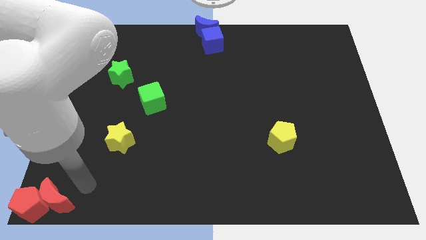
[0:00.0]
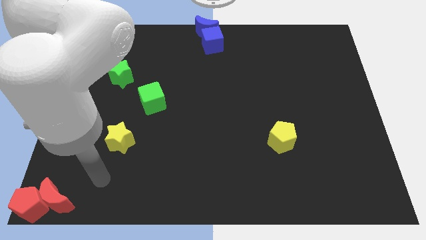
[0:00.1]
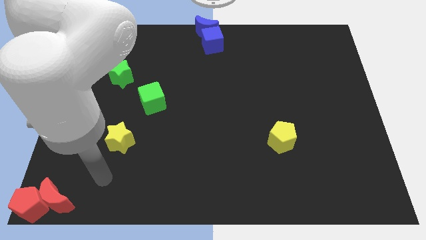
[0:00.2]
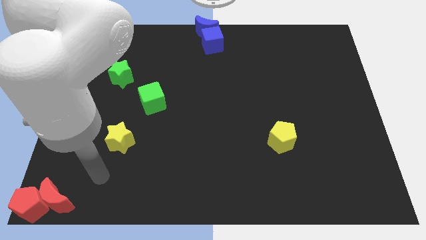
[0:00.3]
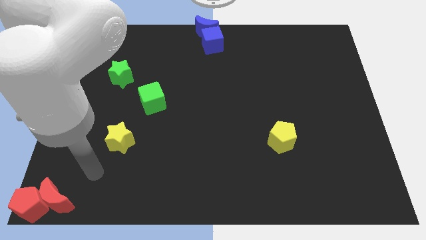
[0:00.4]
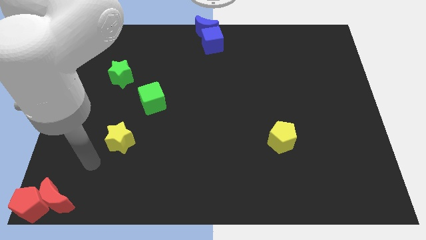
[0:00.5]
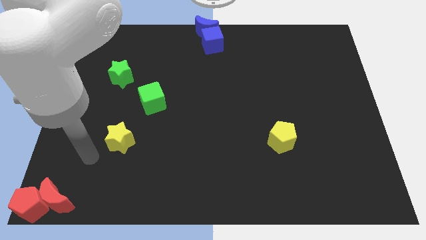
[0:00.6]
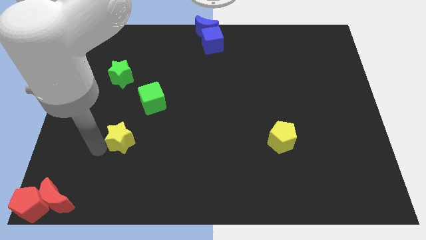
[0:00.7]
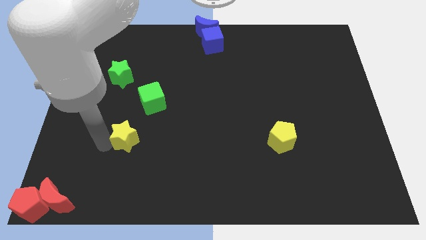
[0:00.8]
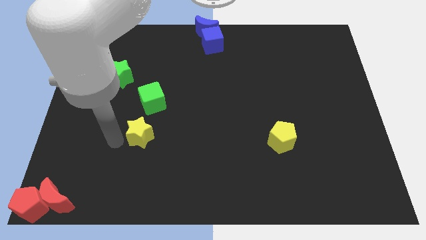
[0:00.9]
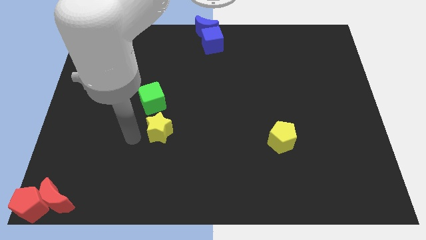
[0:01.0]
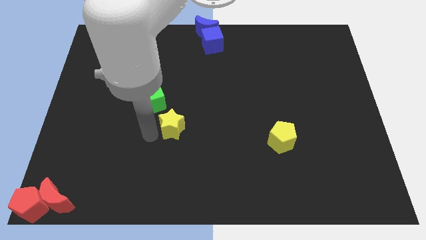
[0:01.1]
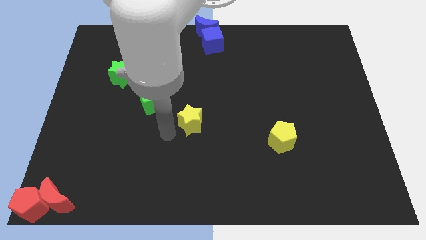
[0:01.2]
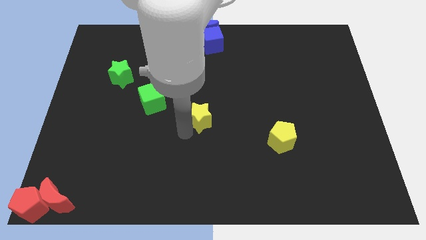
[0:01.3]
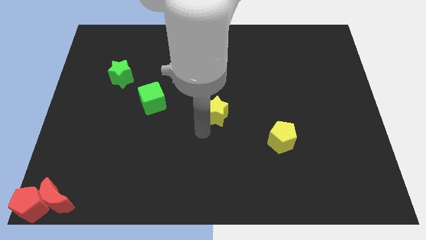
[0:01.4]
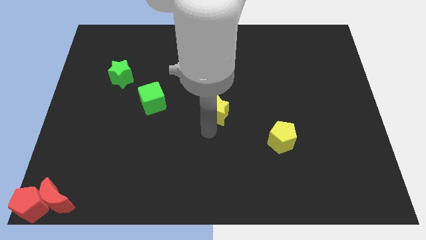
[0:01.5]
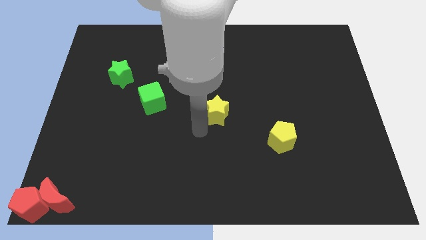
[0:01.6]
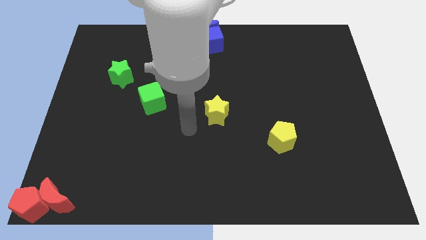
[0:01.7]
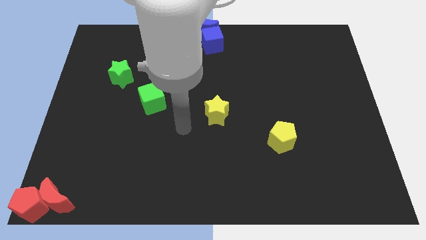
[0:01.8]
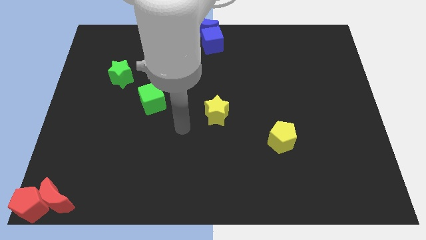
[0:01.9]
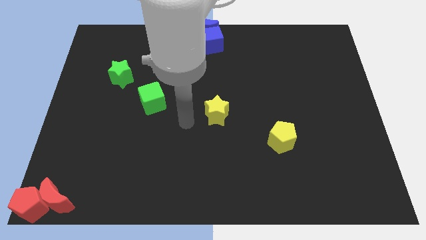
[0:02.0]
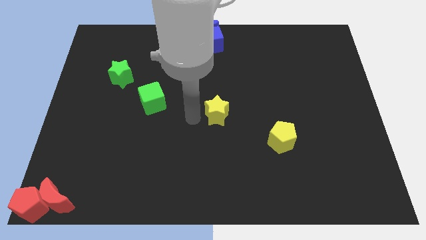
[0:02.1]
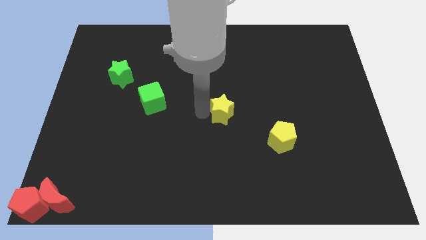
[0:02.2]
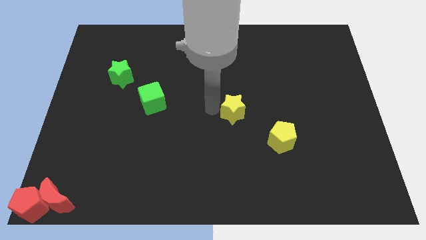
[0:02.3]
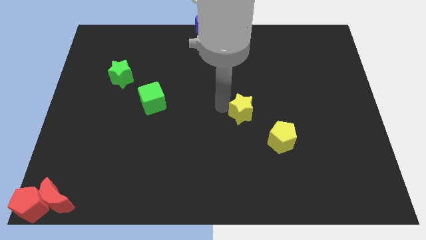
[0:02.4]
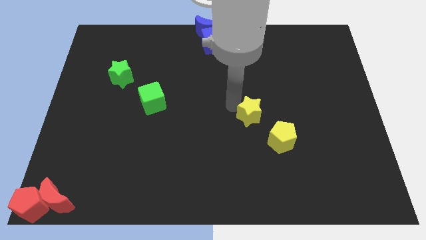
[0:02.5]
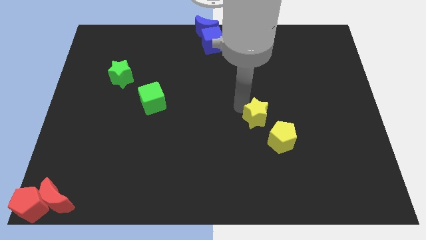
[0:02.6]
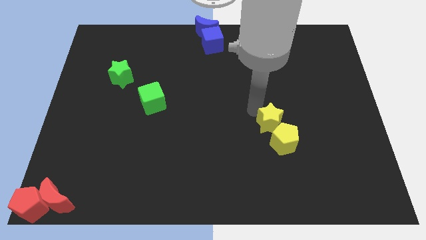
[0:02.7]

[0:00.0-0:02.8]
place the yellow star top of the yellow pentagon

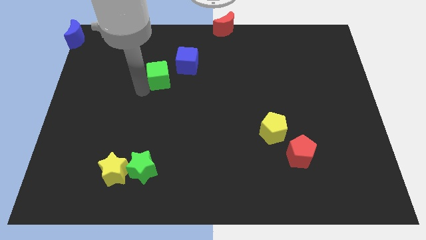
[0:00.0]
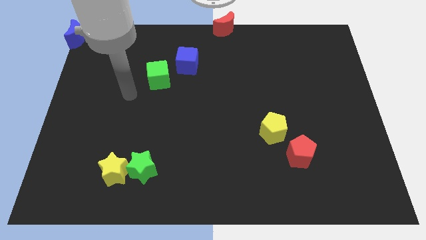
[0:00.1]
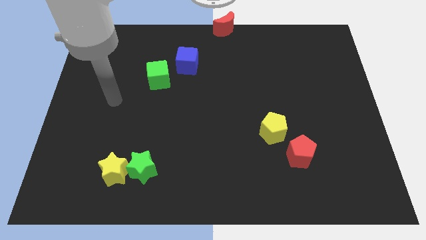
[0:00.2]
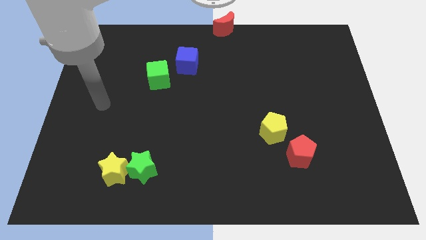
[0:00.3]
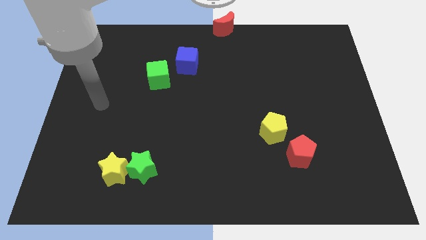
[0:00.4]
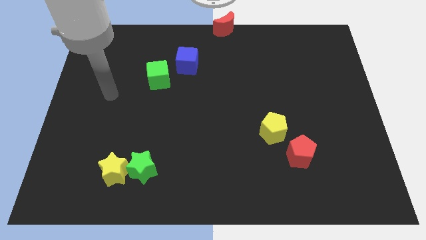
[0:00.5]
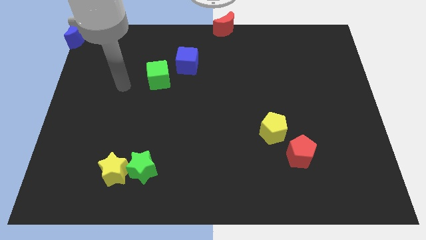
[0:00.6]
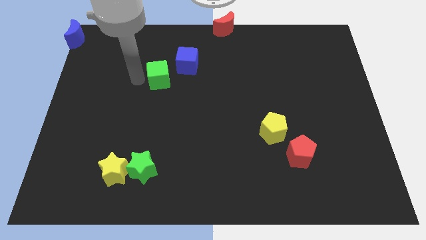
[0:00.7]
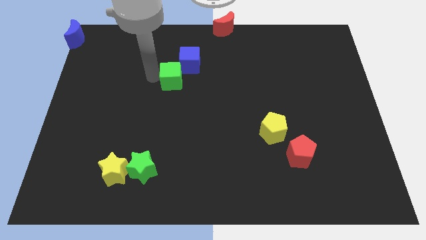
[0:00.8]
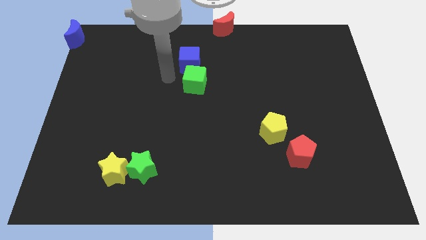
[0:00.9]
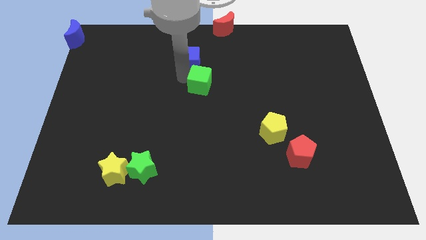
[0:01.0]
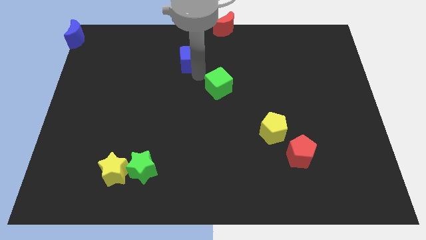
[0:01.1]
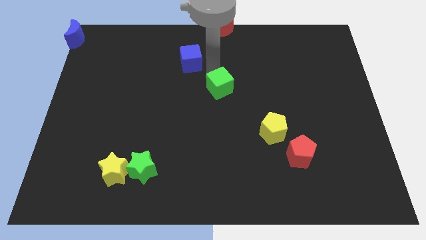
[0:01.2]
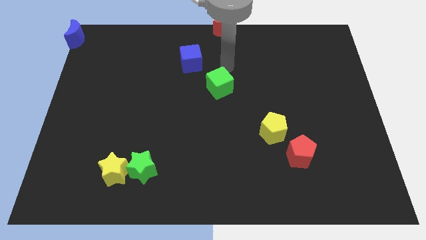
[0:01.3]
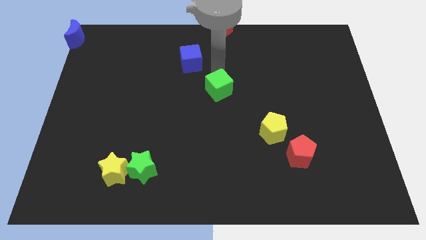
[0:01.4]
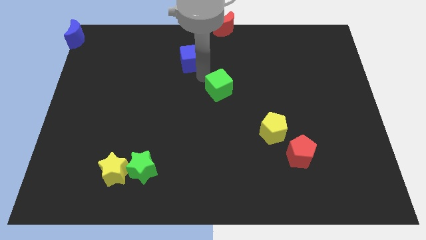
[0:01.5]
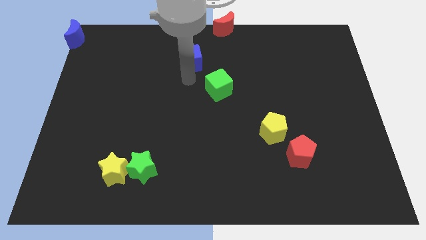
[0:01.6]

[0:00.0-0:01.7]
place the green cube above the yellow pentagon

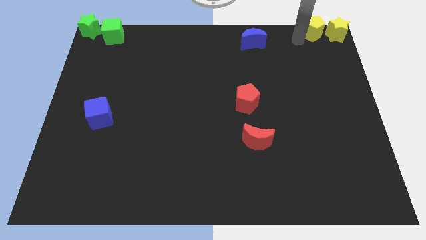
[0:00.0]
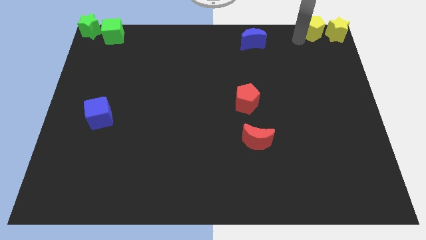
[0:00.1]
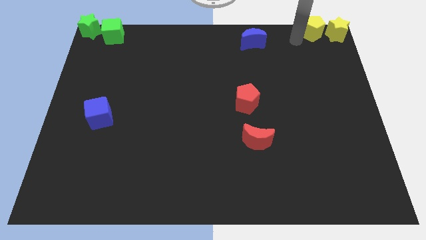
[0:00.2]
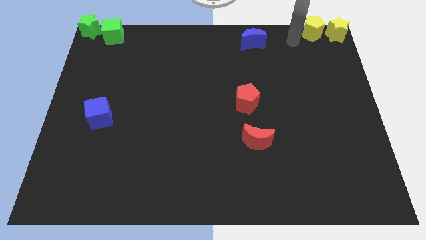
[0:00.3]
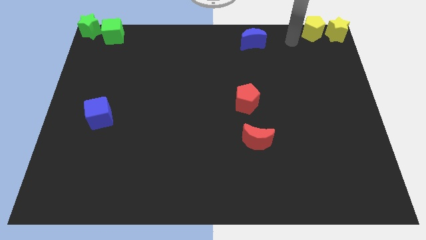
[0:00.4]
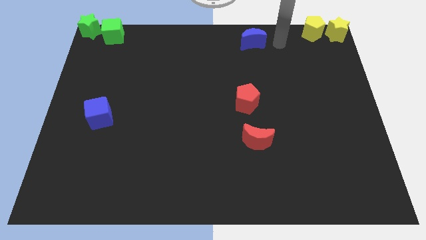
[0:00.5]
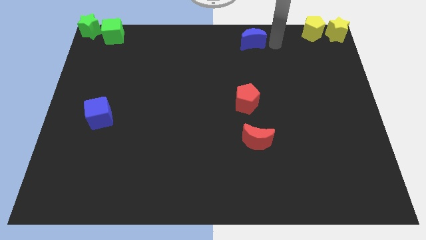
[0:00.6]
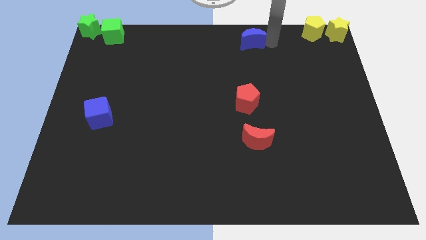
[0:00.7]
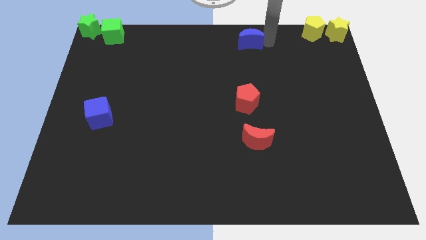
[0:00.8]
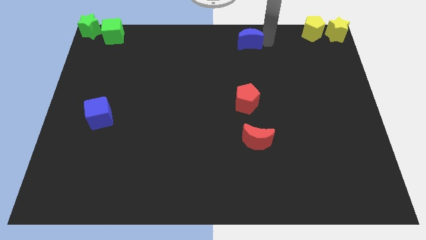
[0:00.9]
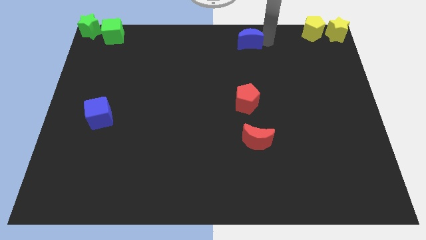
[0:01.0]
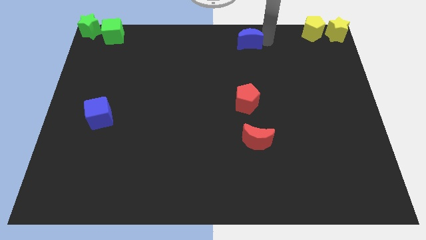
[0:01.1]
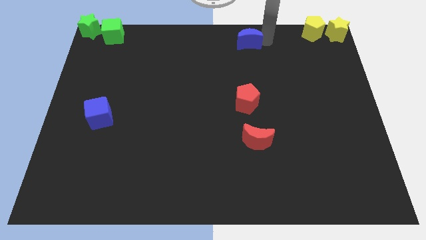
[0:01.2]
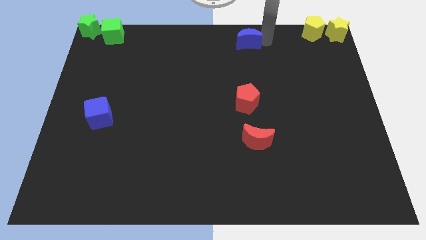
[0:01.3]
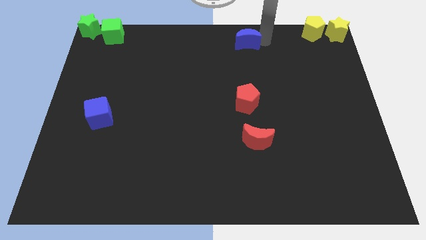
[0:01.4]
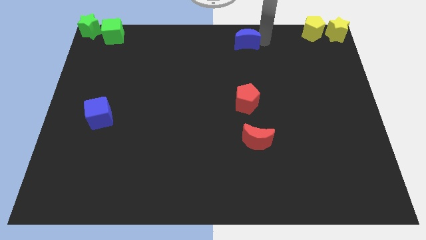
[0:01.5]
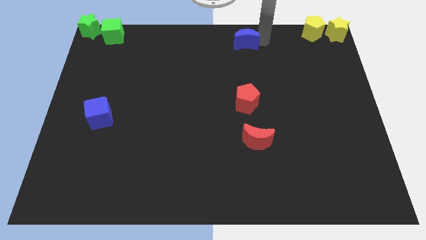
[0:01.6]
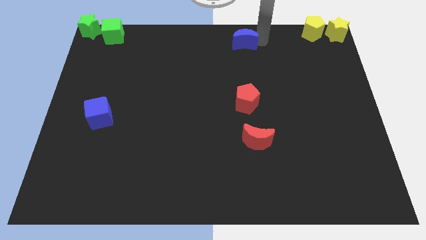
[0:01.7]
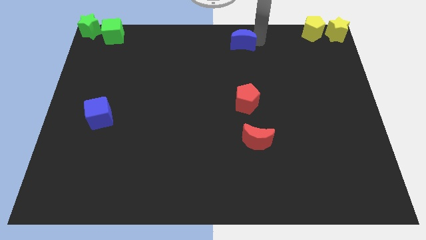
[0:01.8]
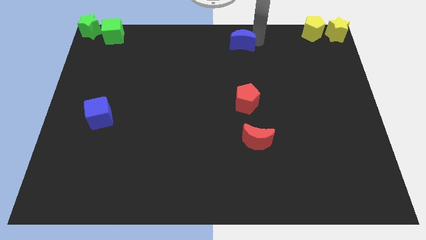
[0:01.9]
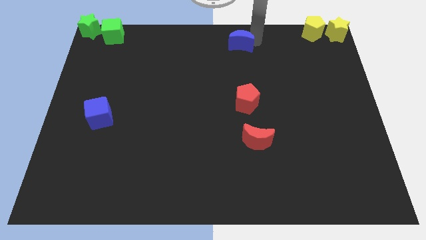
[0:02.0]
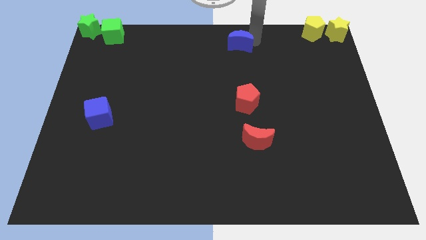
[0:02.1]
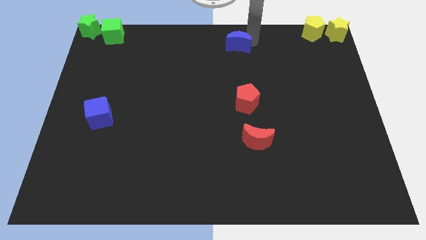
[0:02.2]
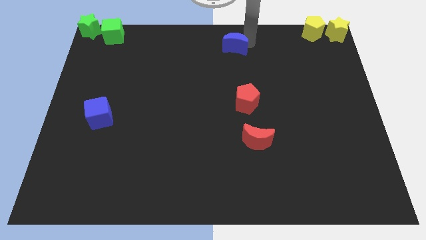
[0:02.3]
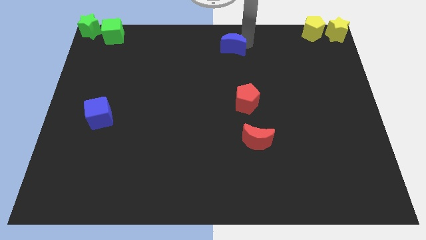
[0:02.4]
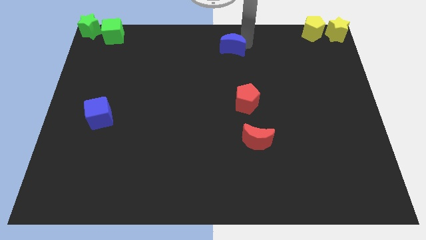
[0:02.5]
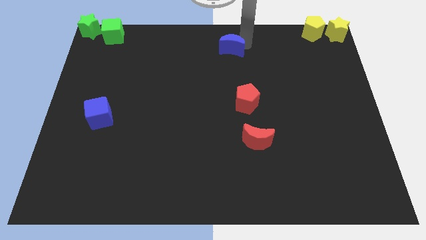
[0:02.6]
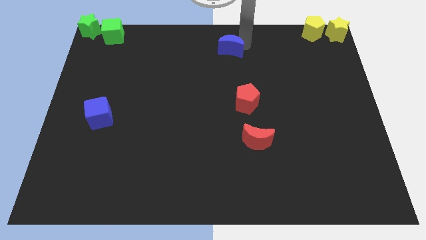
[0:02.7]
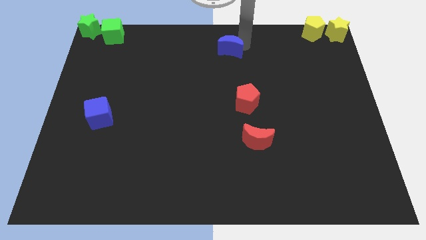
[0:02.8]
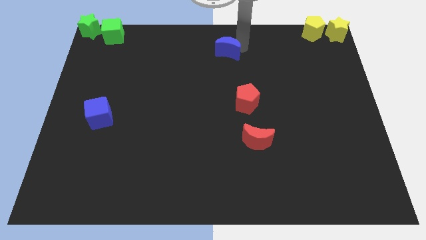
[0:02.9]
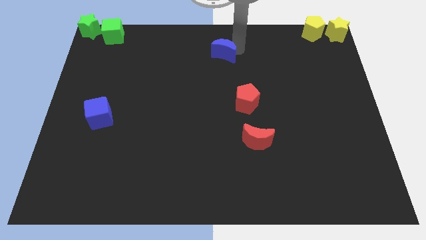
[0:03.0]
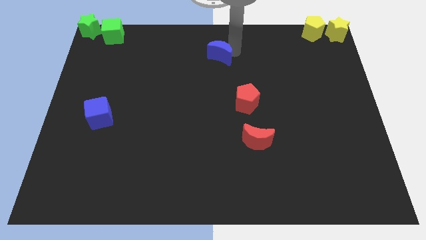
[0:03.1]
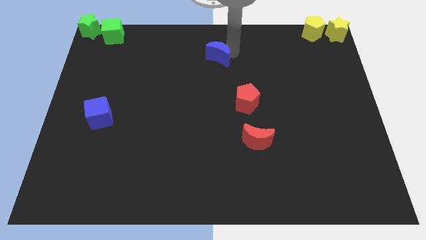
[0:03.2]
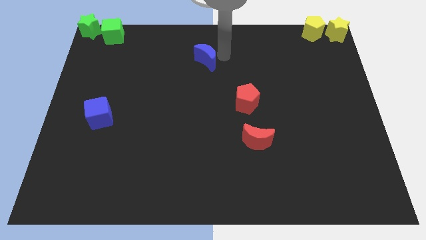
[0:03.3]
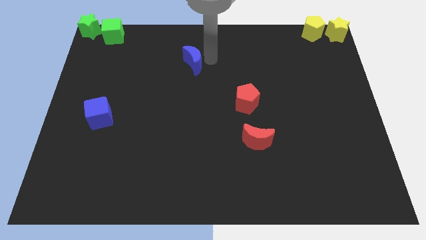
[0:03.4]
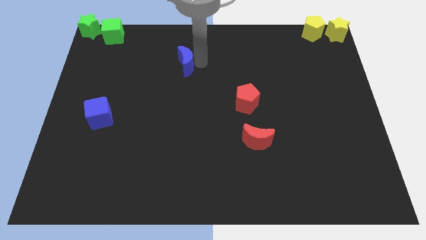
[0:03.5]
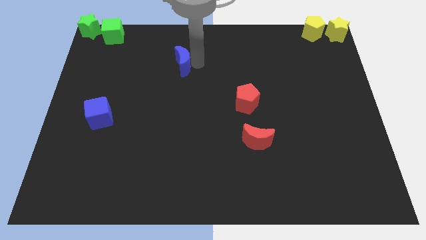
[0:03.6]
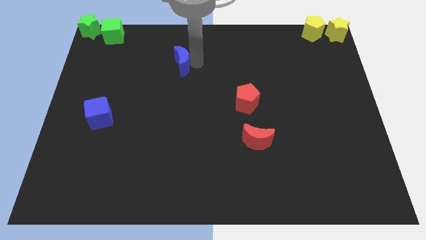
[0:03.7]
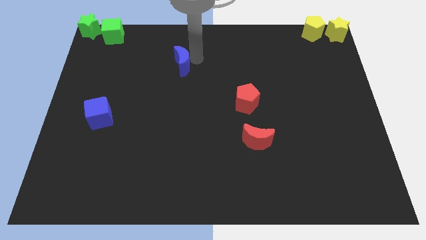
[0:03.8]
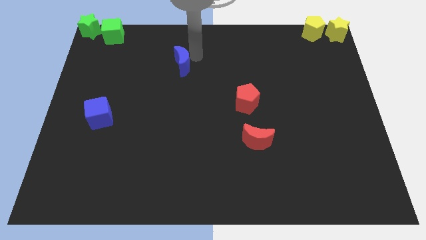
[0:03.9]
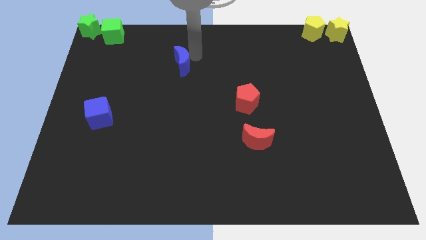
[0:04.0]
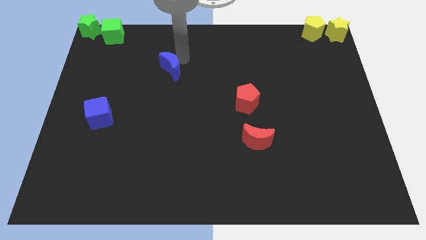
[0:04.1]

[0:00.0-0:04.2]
push the blue moon towards the center

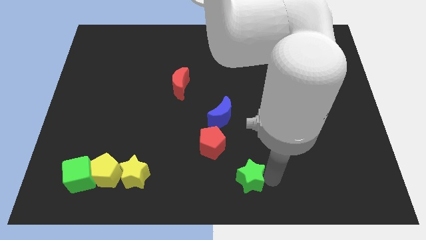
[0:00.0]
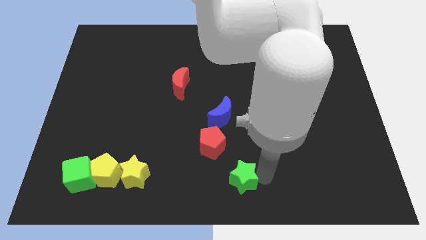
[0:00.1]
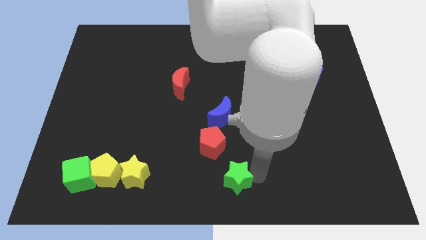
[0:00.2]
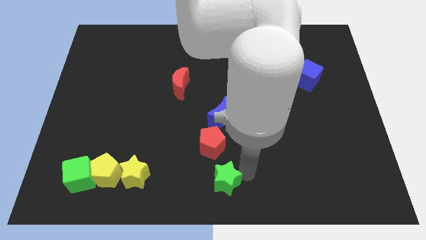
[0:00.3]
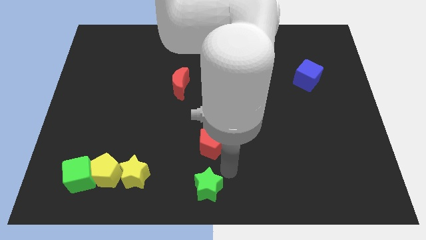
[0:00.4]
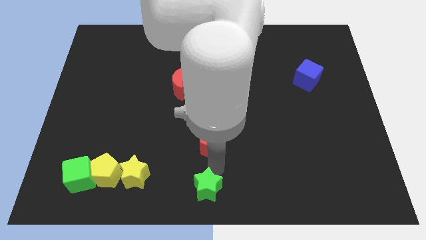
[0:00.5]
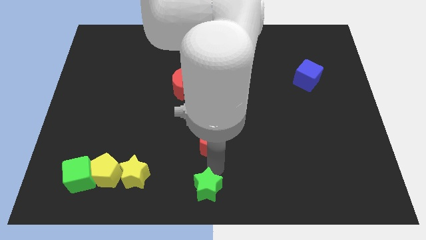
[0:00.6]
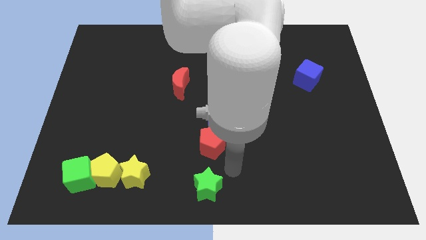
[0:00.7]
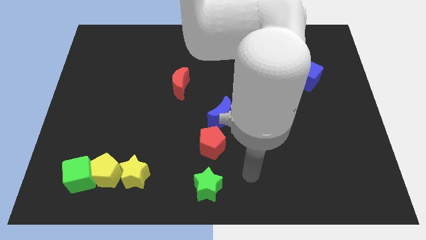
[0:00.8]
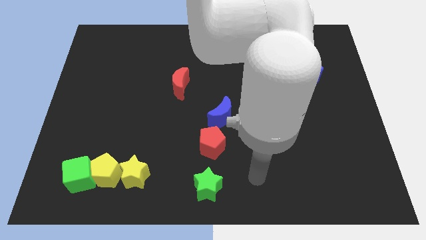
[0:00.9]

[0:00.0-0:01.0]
place green star below red pentagon
